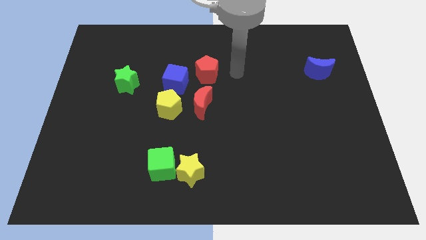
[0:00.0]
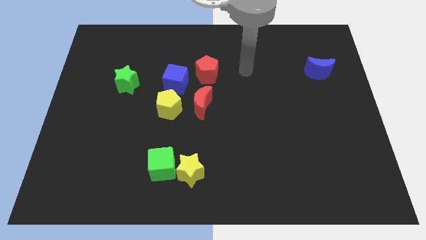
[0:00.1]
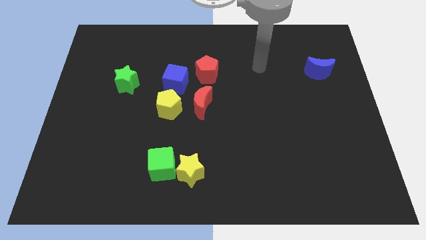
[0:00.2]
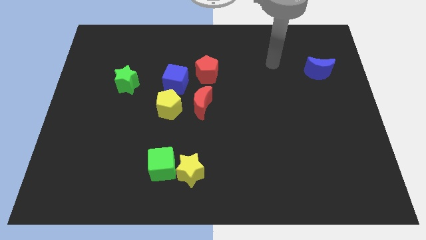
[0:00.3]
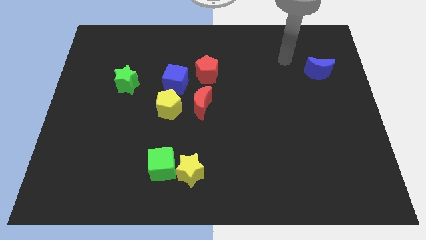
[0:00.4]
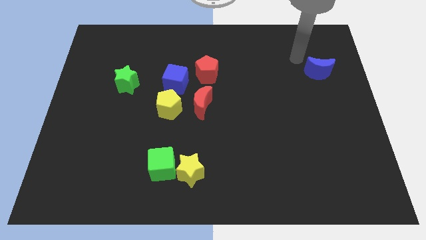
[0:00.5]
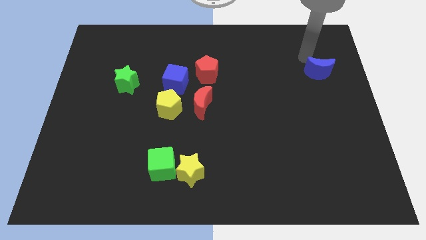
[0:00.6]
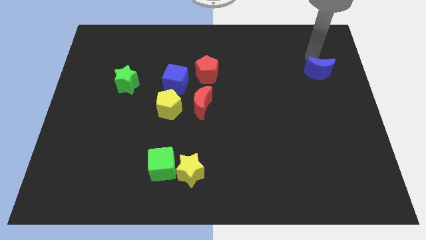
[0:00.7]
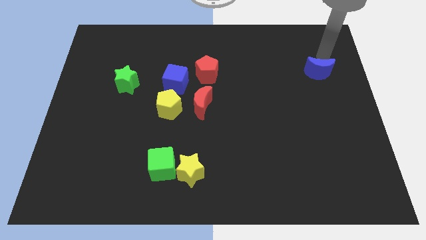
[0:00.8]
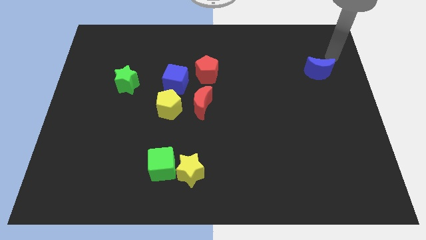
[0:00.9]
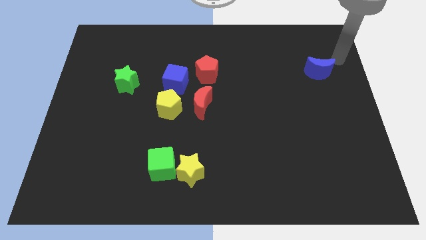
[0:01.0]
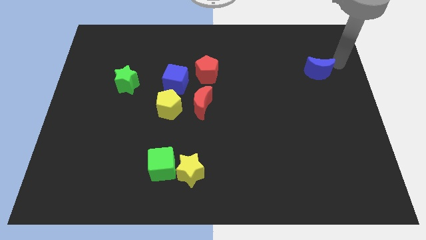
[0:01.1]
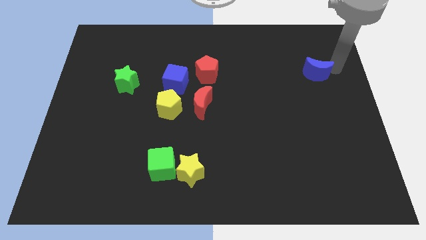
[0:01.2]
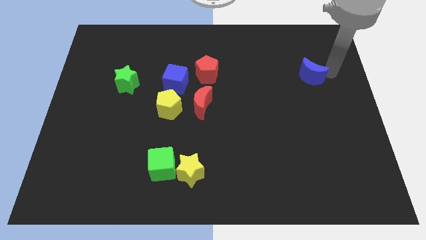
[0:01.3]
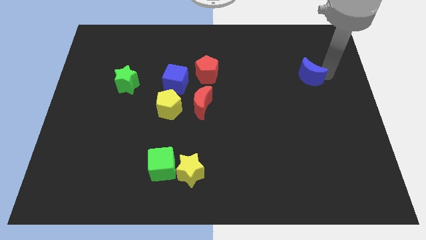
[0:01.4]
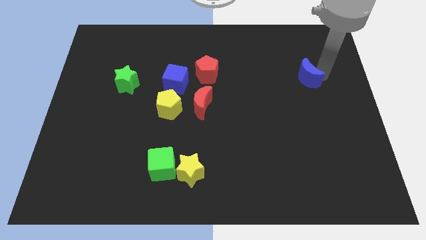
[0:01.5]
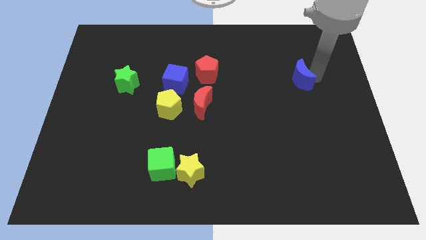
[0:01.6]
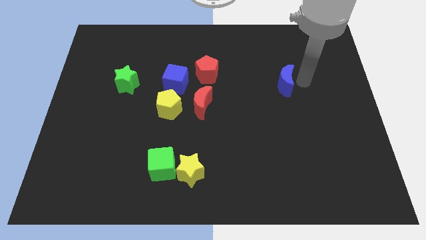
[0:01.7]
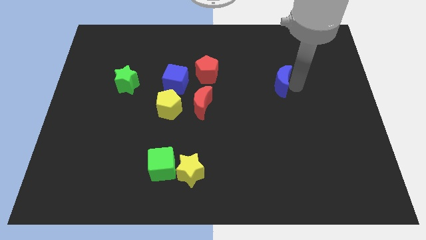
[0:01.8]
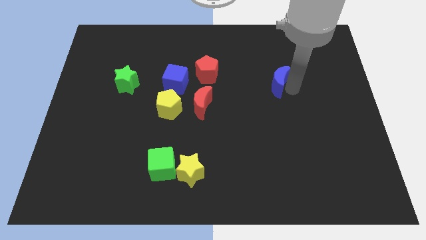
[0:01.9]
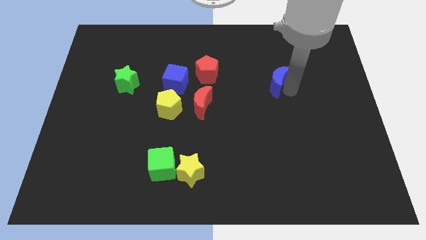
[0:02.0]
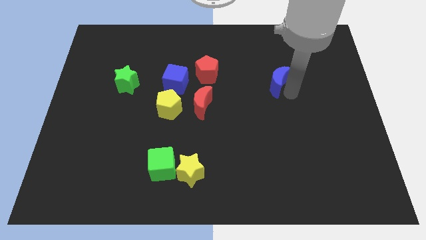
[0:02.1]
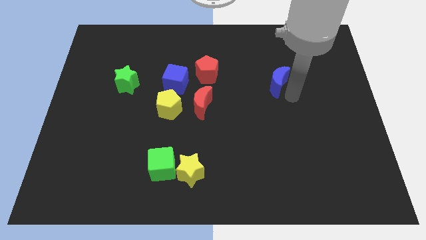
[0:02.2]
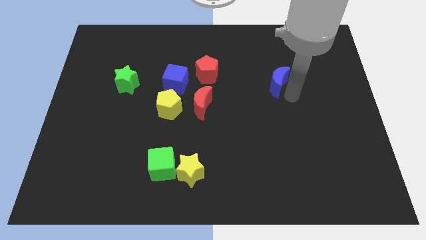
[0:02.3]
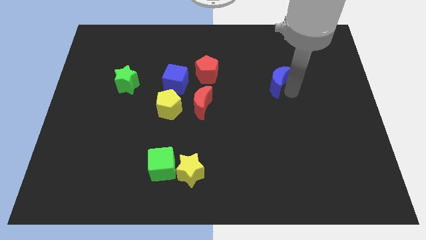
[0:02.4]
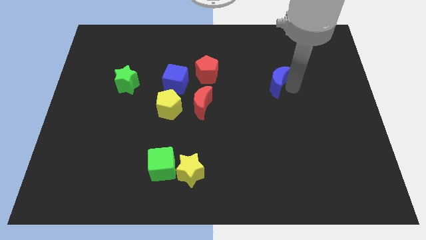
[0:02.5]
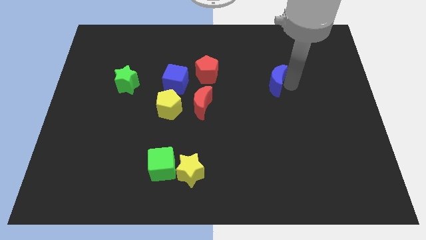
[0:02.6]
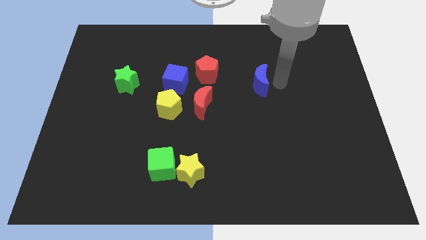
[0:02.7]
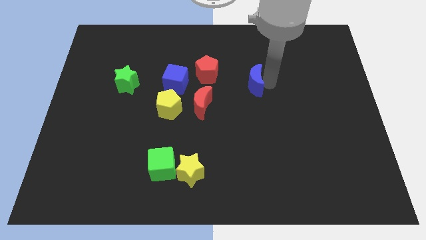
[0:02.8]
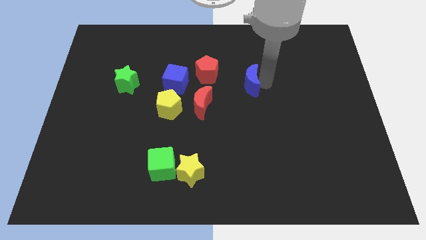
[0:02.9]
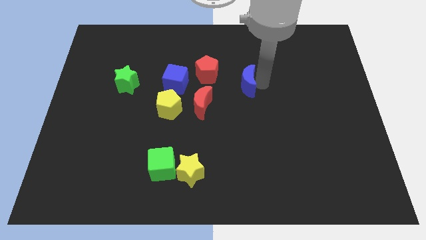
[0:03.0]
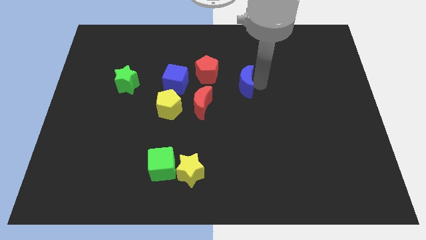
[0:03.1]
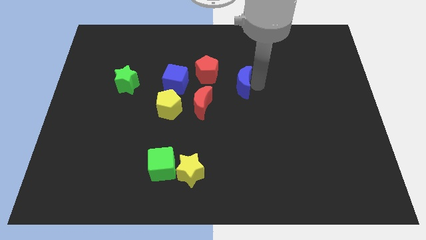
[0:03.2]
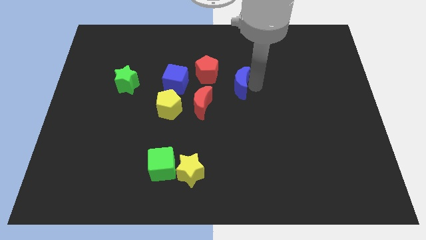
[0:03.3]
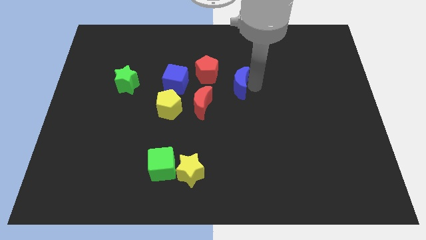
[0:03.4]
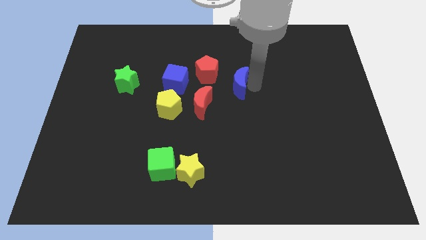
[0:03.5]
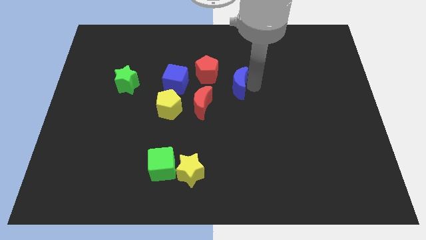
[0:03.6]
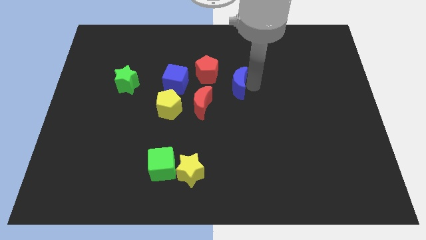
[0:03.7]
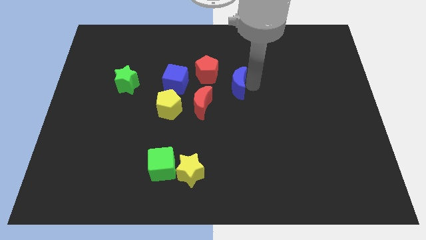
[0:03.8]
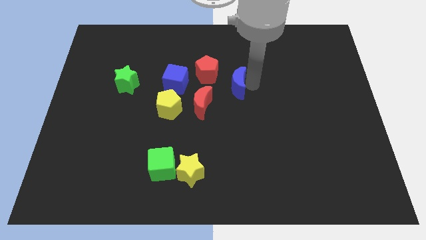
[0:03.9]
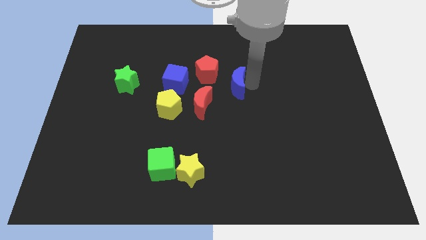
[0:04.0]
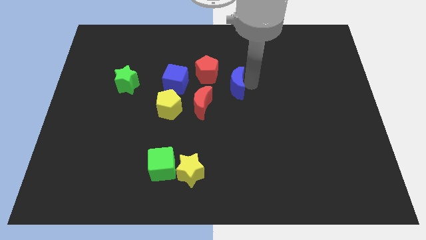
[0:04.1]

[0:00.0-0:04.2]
place the blue crescent towards the bottom right side of the red pentagon

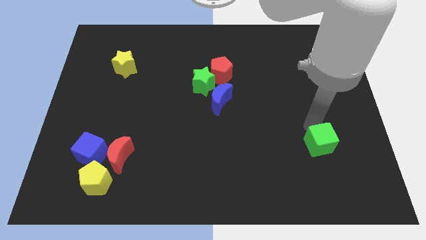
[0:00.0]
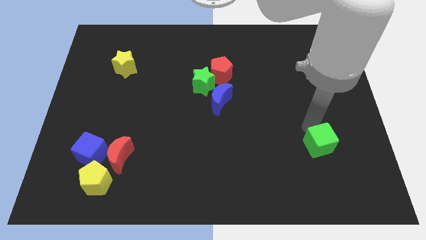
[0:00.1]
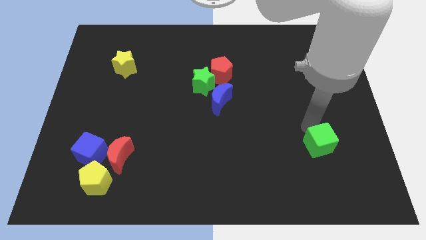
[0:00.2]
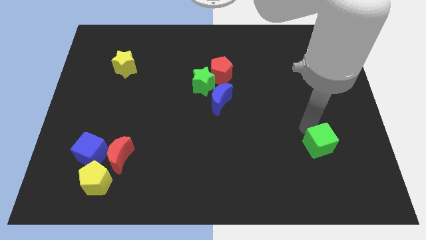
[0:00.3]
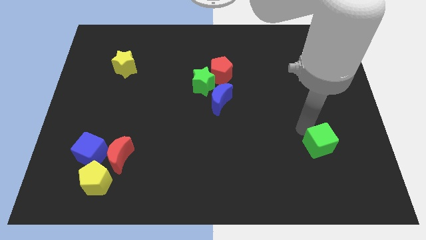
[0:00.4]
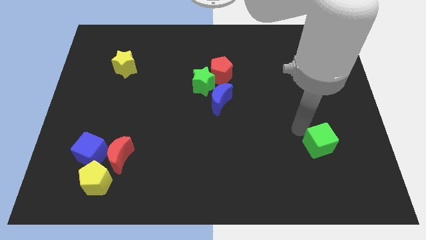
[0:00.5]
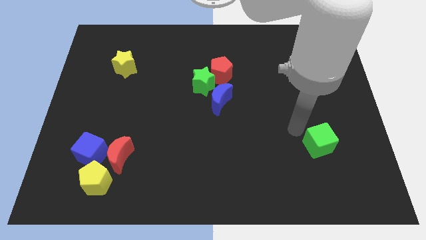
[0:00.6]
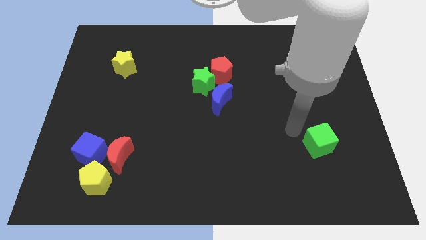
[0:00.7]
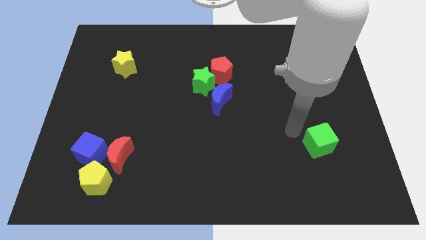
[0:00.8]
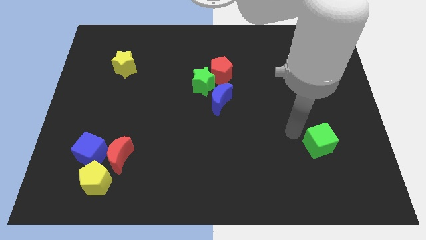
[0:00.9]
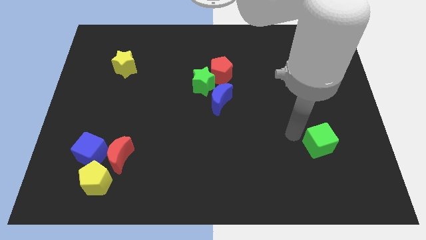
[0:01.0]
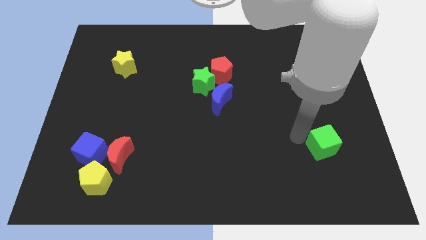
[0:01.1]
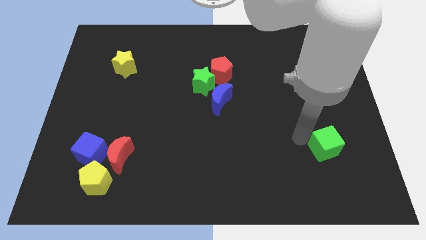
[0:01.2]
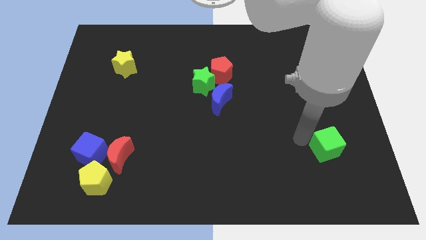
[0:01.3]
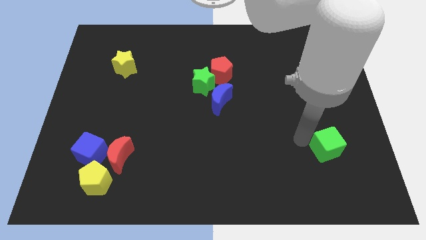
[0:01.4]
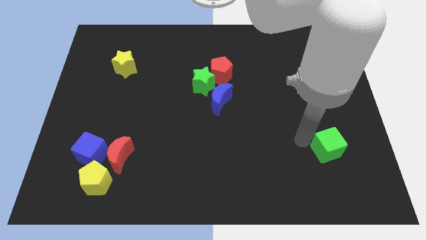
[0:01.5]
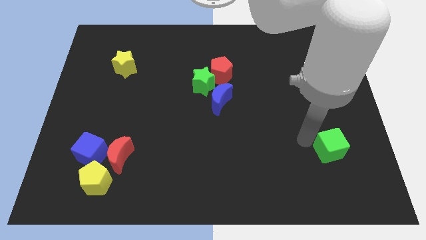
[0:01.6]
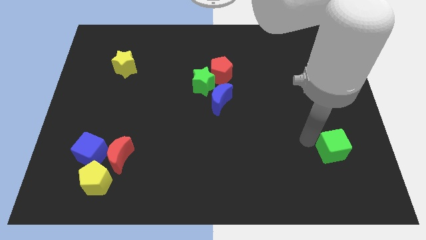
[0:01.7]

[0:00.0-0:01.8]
push the green cube slightly downwards

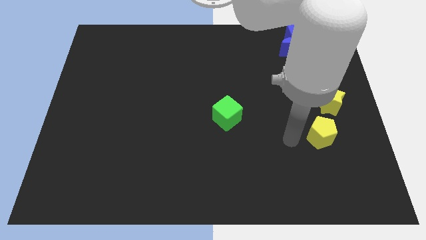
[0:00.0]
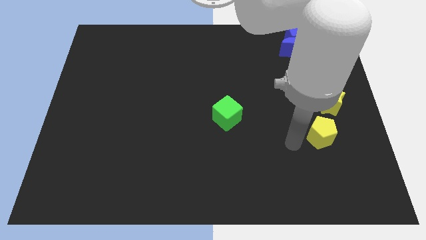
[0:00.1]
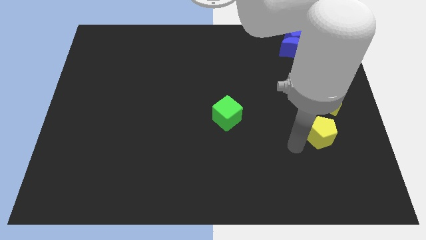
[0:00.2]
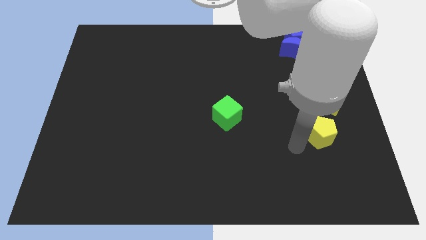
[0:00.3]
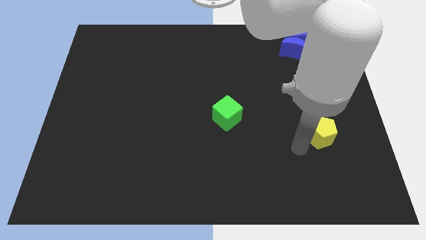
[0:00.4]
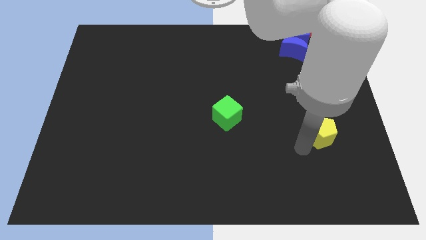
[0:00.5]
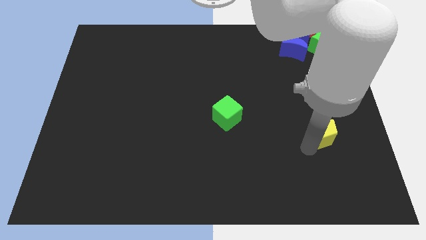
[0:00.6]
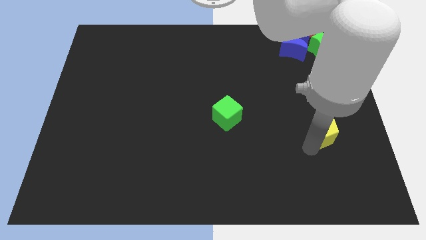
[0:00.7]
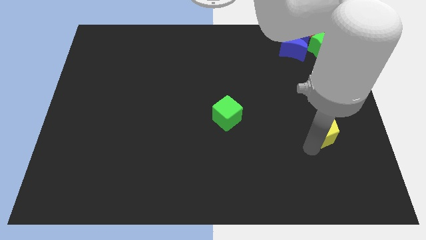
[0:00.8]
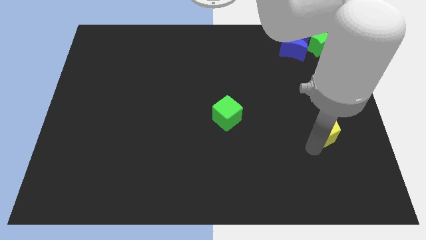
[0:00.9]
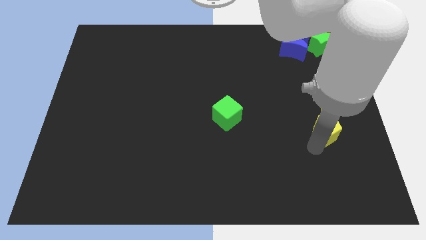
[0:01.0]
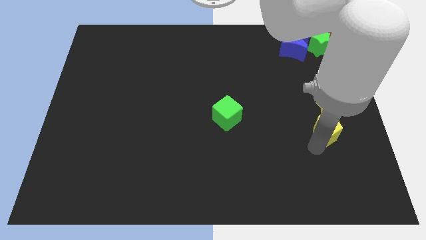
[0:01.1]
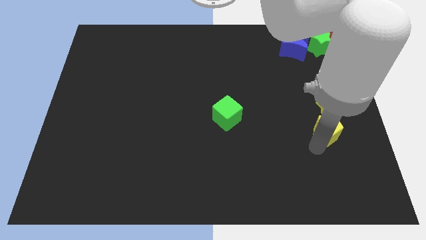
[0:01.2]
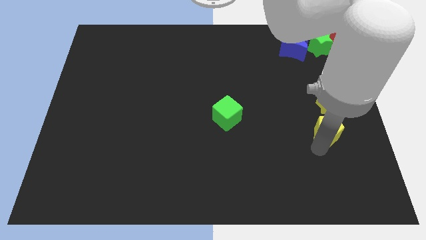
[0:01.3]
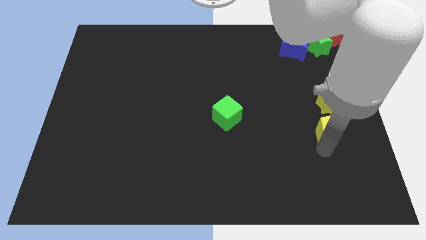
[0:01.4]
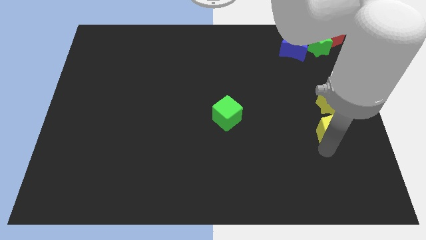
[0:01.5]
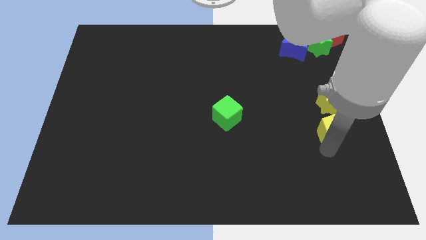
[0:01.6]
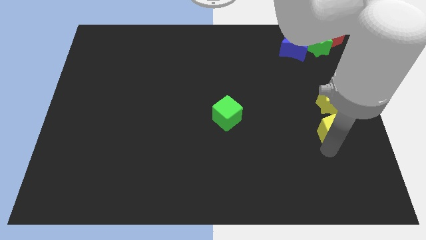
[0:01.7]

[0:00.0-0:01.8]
put the yellow pentagon below the yellow star

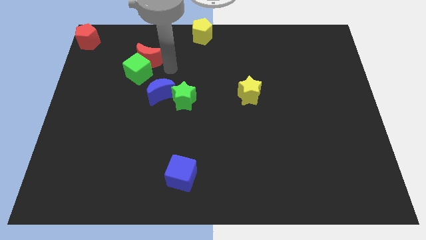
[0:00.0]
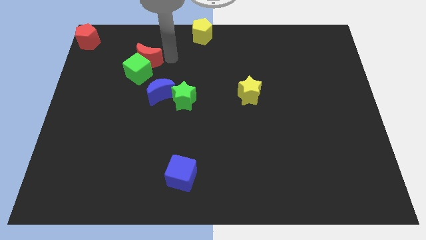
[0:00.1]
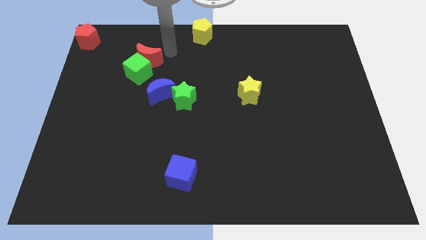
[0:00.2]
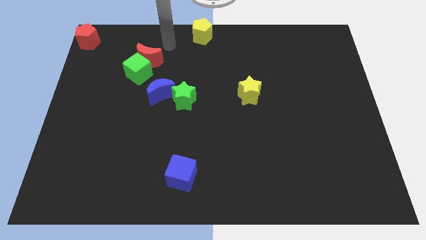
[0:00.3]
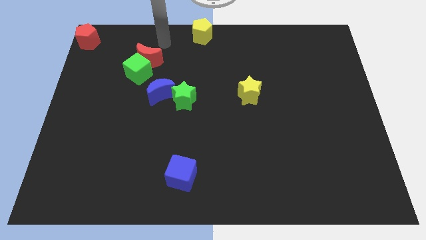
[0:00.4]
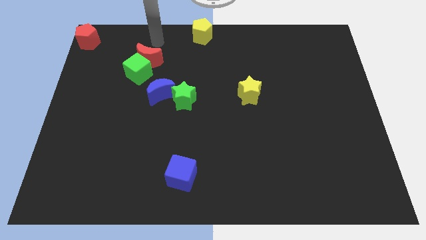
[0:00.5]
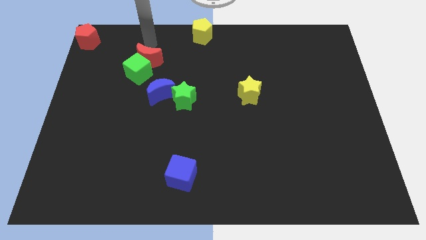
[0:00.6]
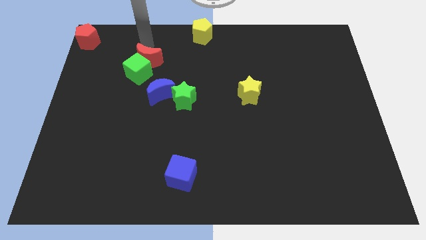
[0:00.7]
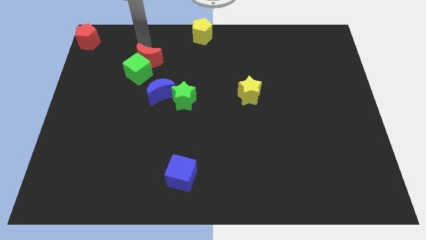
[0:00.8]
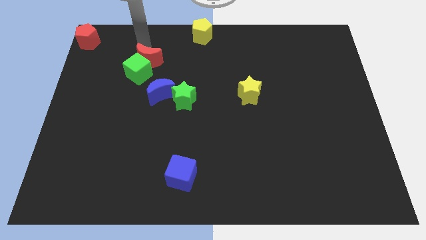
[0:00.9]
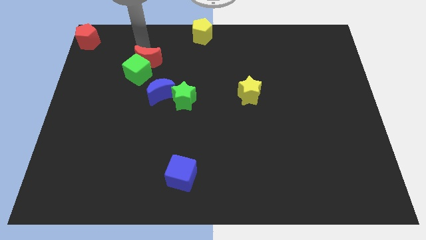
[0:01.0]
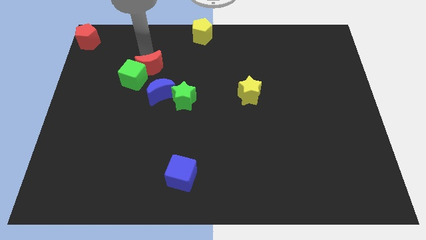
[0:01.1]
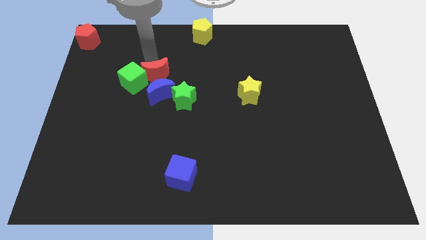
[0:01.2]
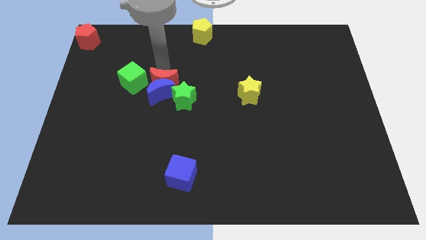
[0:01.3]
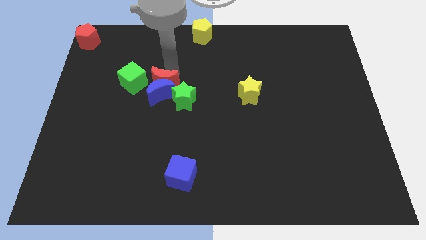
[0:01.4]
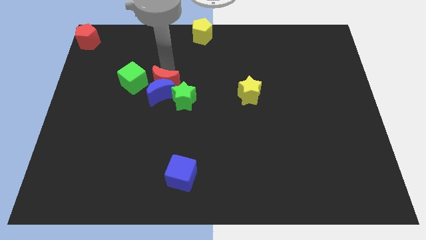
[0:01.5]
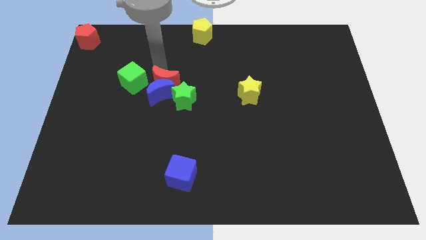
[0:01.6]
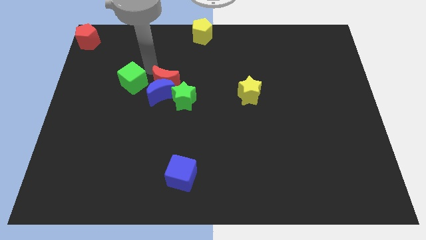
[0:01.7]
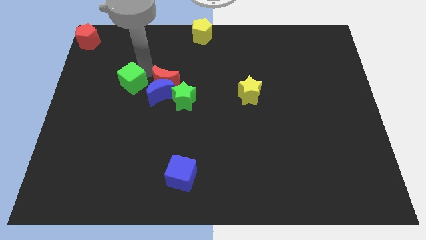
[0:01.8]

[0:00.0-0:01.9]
move red moon to the top of blue moon
